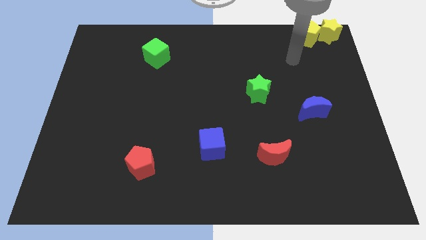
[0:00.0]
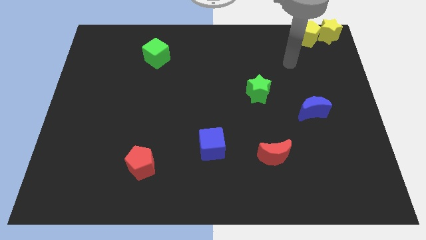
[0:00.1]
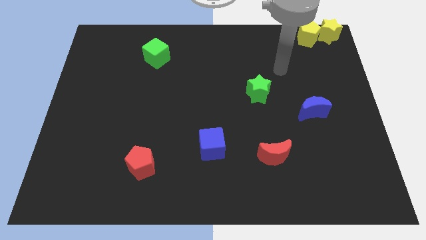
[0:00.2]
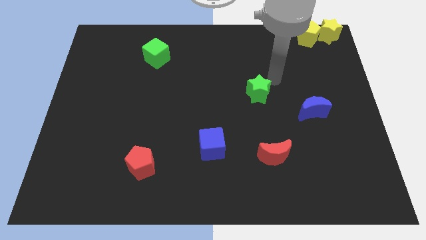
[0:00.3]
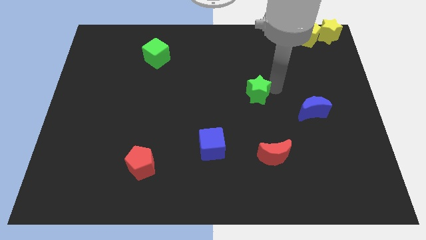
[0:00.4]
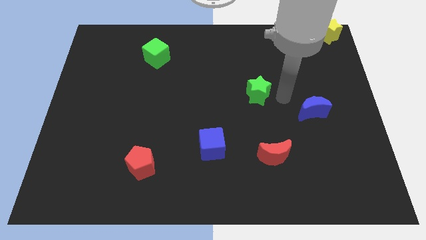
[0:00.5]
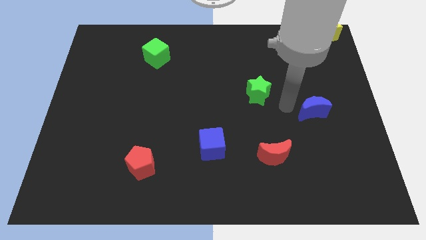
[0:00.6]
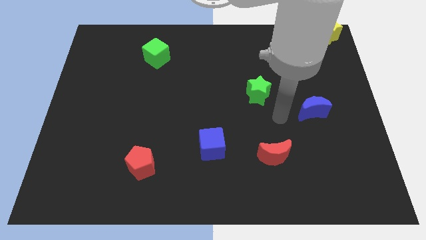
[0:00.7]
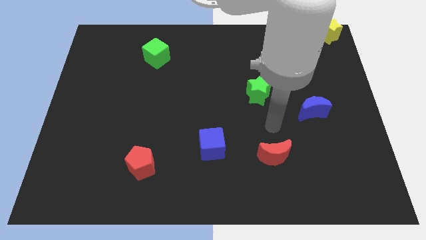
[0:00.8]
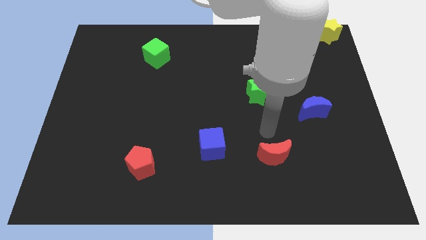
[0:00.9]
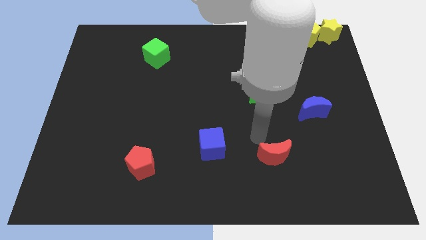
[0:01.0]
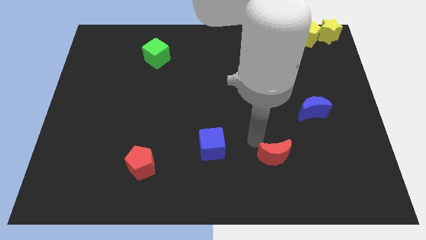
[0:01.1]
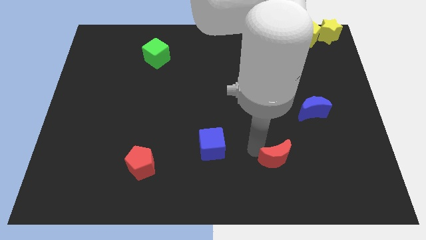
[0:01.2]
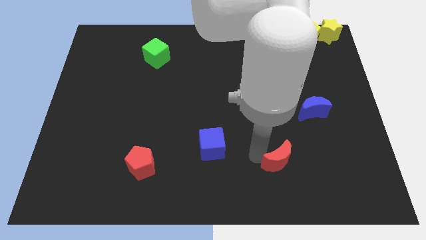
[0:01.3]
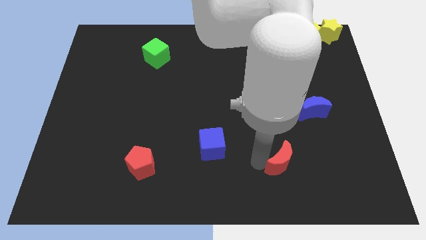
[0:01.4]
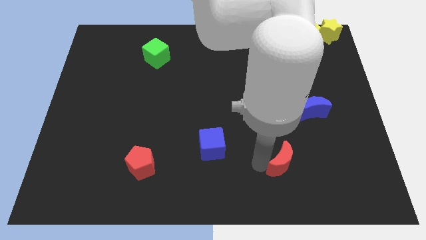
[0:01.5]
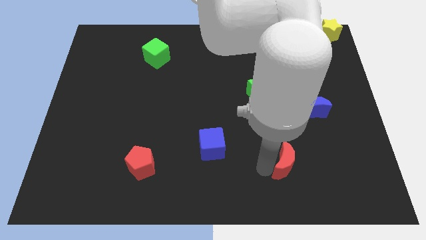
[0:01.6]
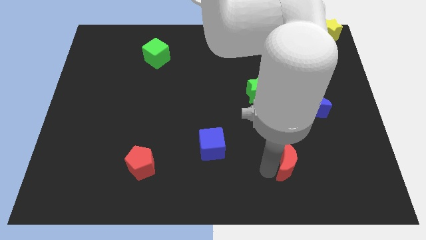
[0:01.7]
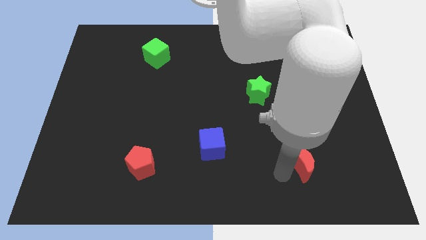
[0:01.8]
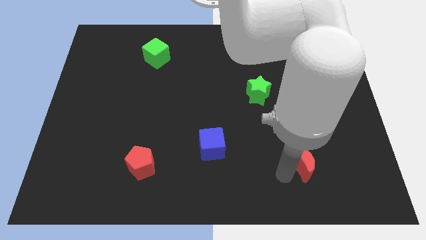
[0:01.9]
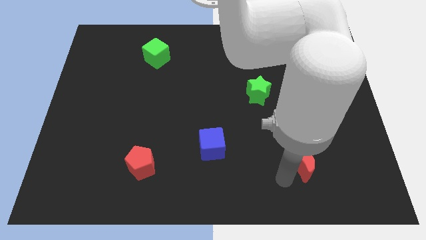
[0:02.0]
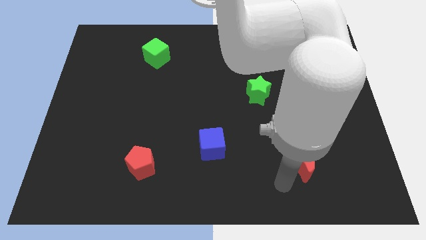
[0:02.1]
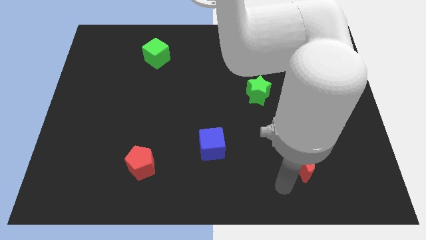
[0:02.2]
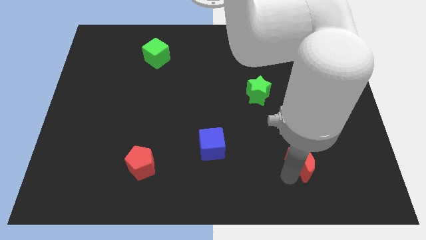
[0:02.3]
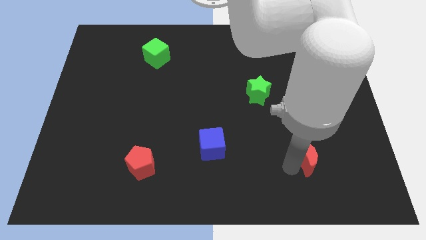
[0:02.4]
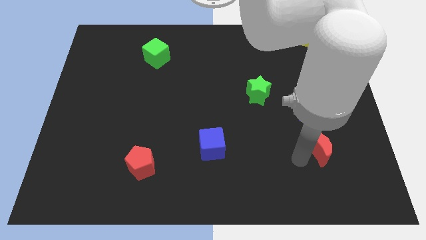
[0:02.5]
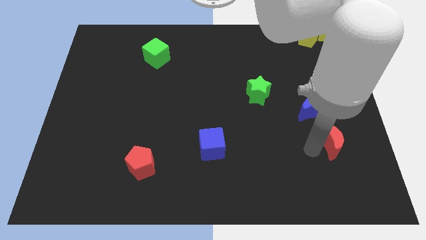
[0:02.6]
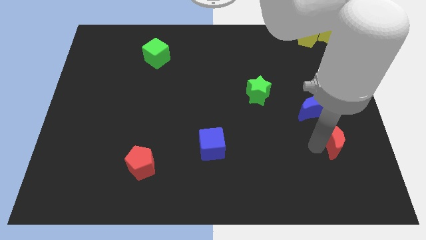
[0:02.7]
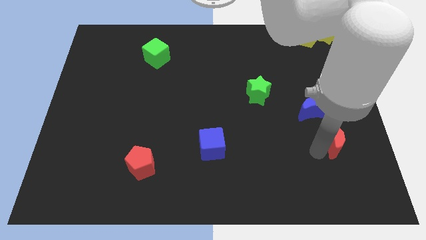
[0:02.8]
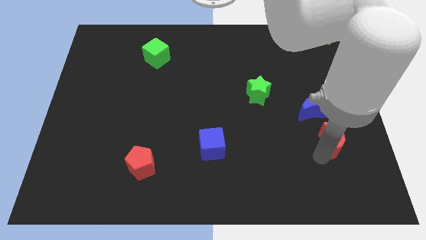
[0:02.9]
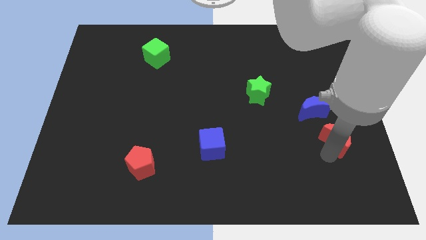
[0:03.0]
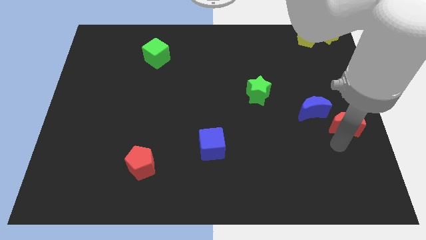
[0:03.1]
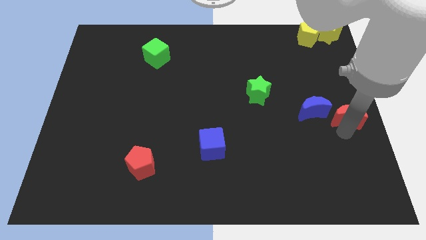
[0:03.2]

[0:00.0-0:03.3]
push the red crescent to center right side

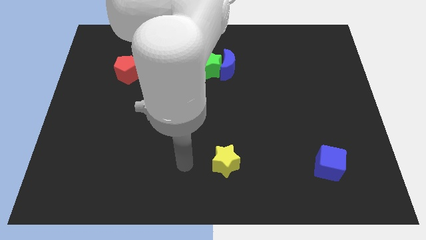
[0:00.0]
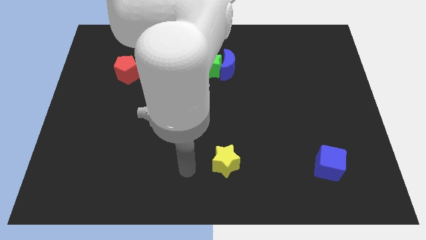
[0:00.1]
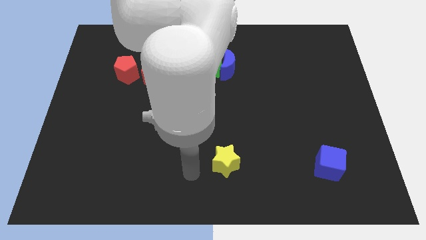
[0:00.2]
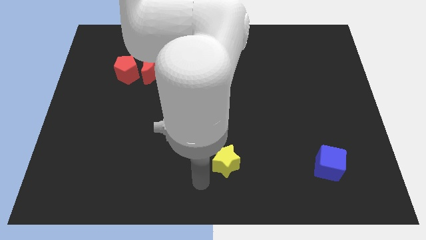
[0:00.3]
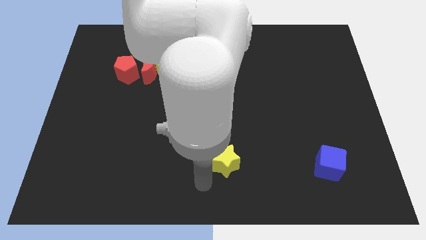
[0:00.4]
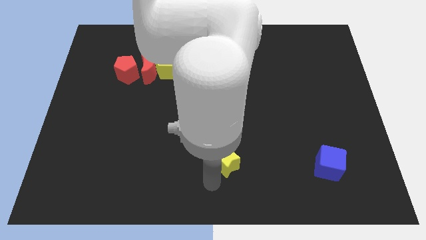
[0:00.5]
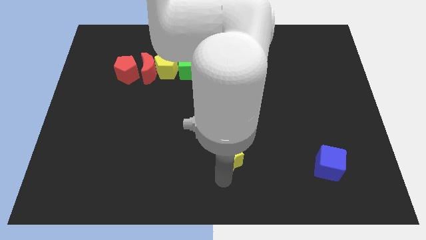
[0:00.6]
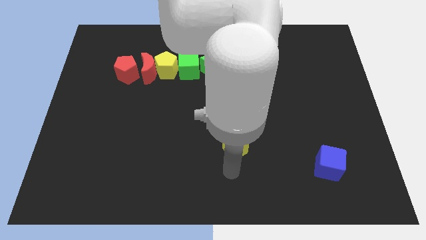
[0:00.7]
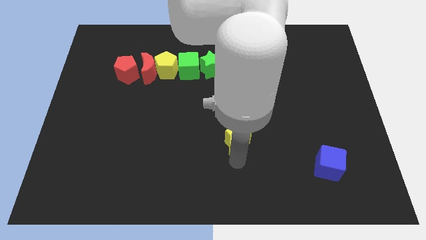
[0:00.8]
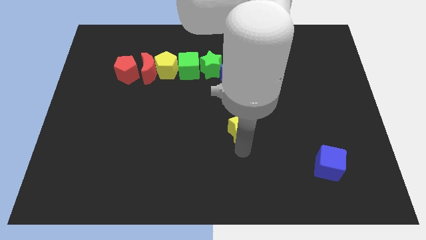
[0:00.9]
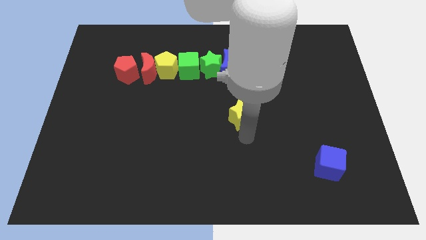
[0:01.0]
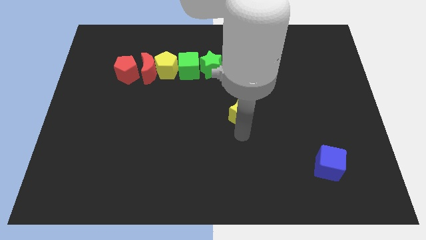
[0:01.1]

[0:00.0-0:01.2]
push the yellow star towards the horizontal line of blocks

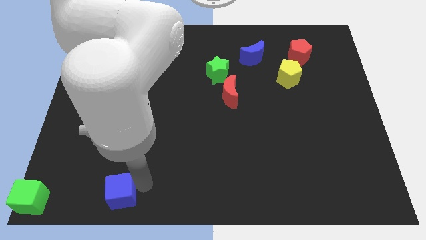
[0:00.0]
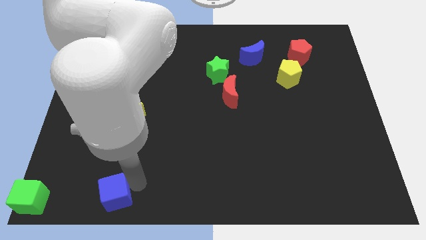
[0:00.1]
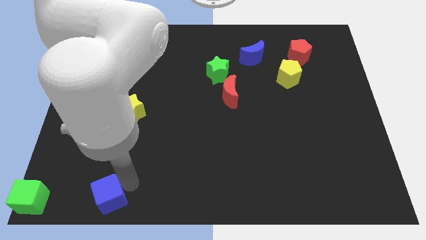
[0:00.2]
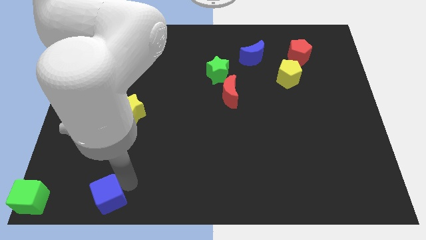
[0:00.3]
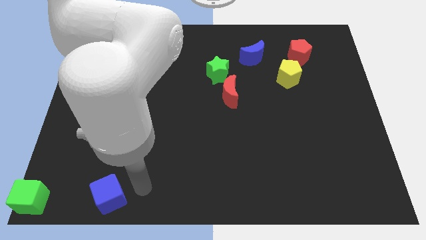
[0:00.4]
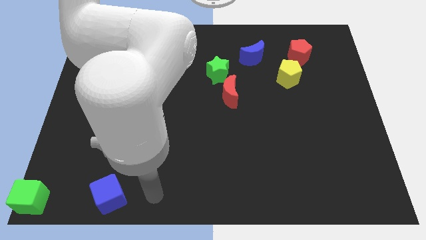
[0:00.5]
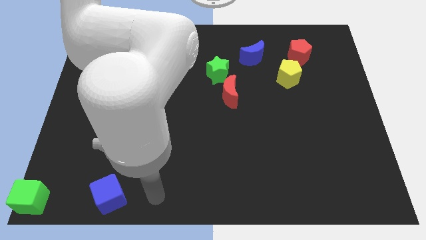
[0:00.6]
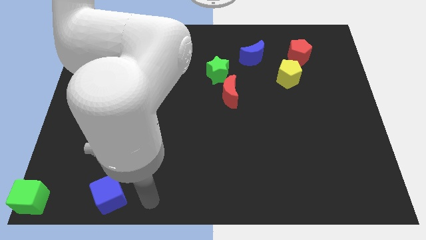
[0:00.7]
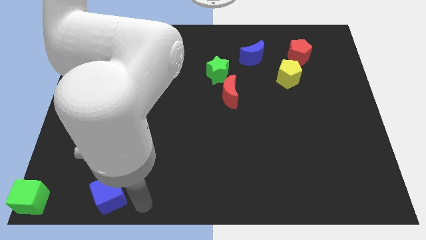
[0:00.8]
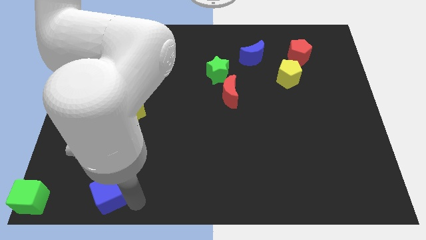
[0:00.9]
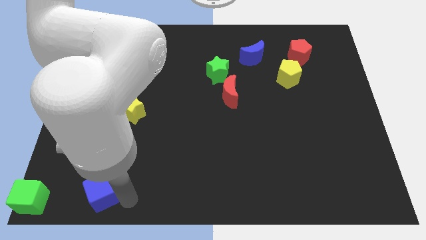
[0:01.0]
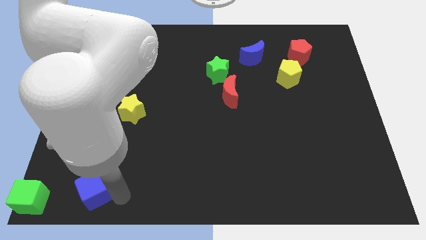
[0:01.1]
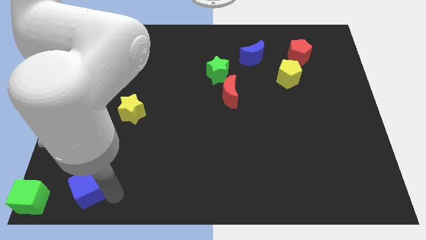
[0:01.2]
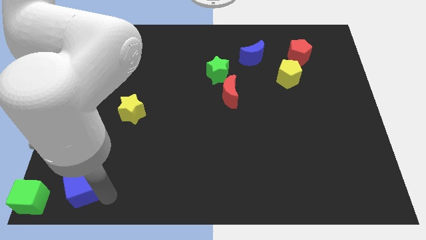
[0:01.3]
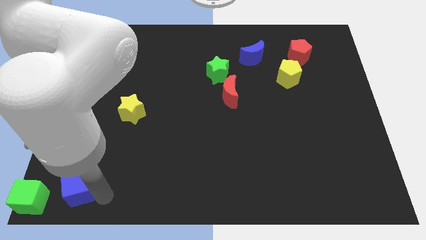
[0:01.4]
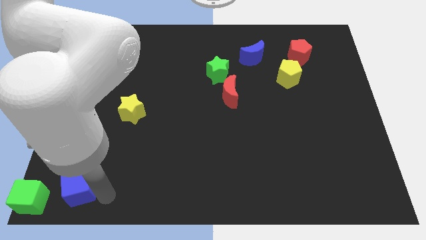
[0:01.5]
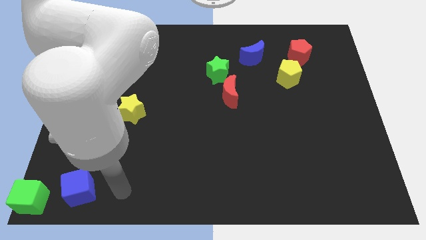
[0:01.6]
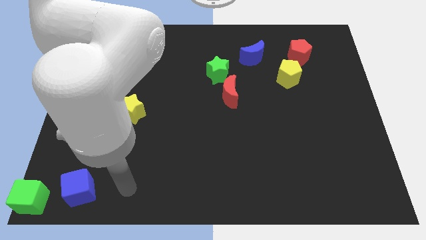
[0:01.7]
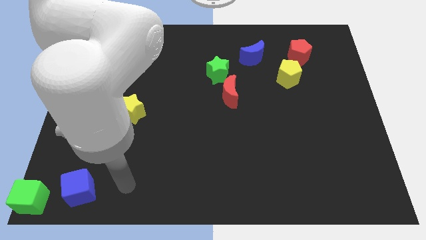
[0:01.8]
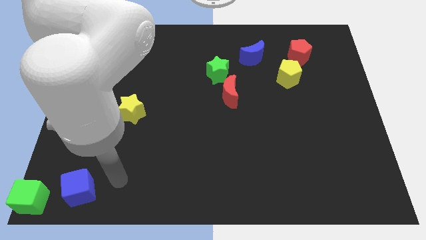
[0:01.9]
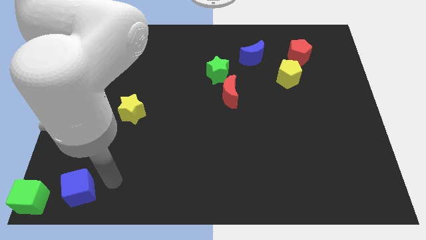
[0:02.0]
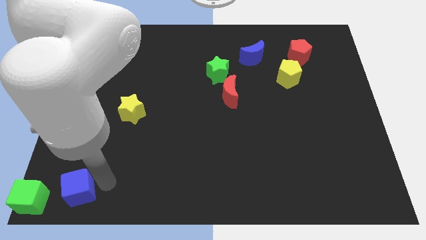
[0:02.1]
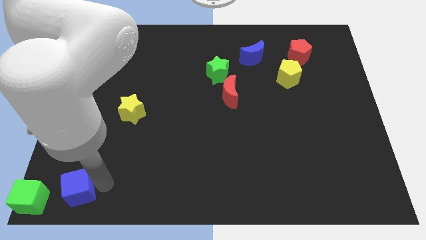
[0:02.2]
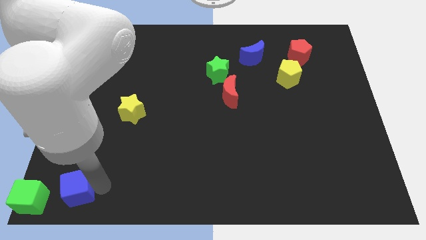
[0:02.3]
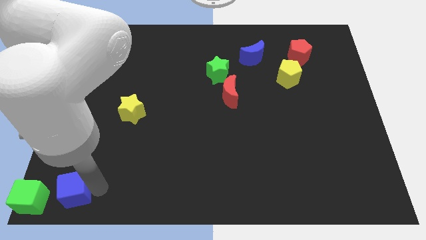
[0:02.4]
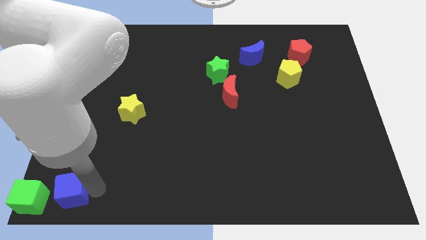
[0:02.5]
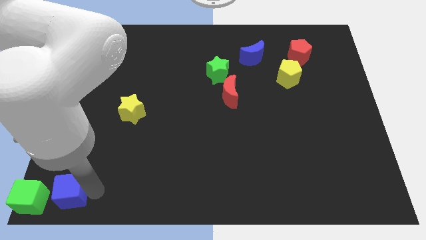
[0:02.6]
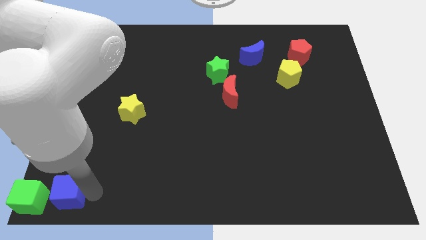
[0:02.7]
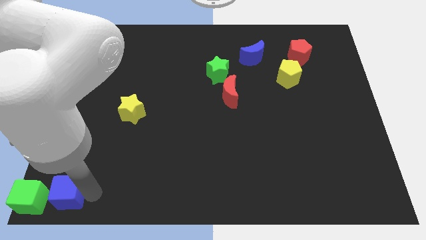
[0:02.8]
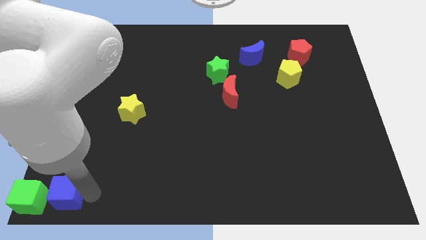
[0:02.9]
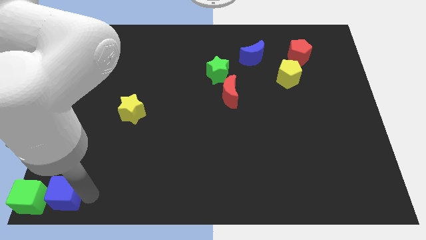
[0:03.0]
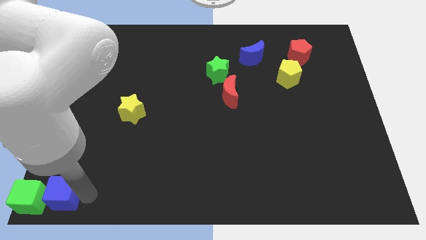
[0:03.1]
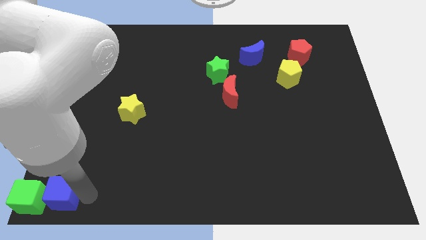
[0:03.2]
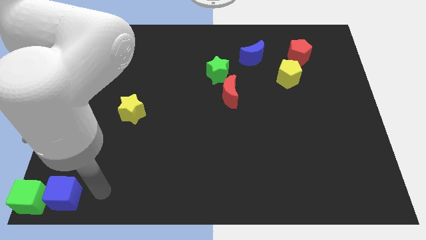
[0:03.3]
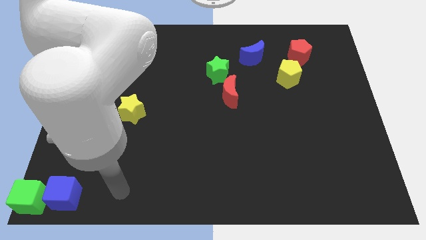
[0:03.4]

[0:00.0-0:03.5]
move blue cube near green cube

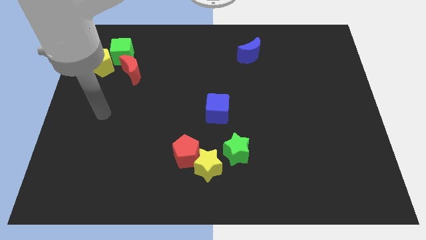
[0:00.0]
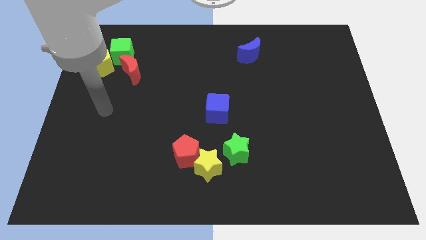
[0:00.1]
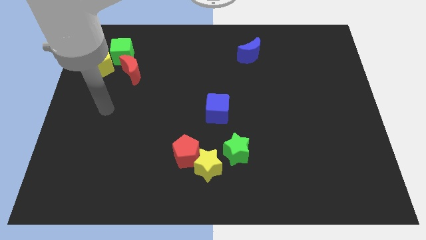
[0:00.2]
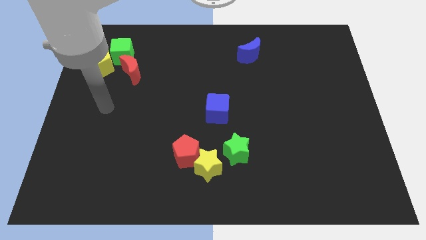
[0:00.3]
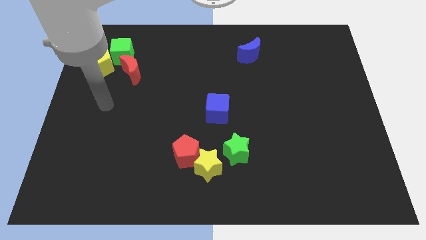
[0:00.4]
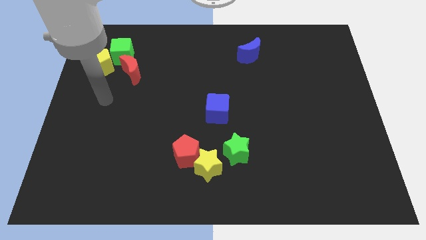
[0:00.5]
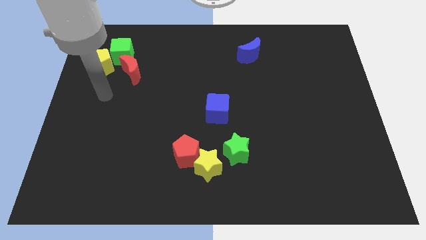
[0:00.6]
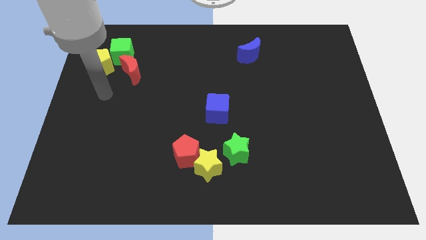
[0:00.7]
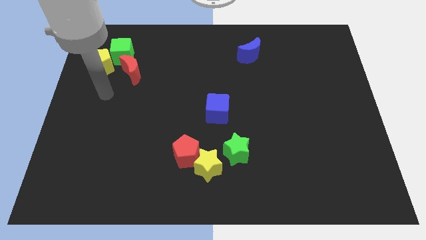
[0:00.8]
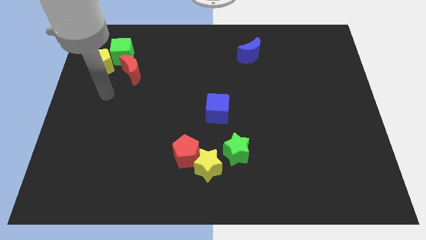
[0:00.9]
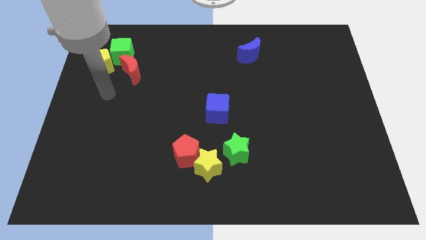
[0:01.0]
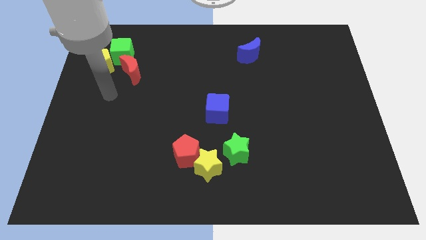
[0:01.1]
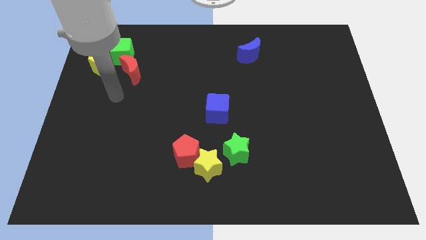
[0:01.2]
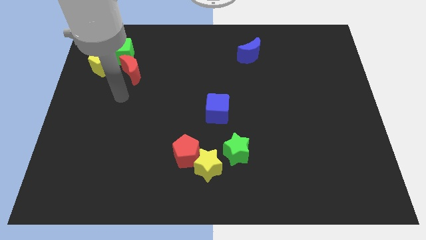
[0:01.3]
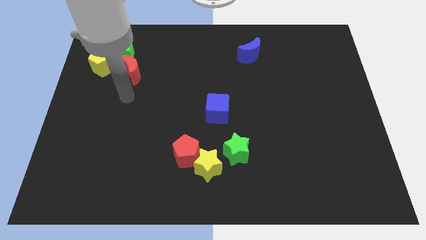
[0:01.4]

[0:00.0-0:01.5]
place your hand under the red crescent
